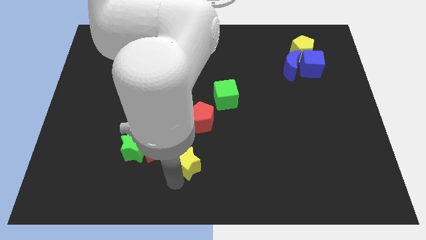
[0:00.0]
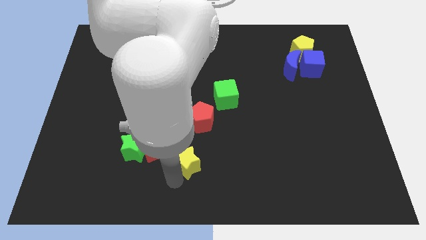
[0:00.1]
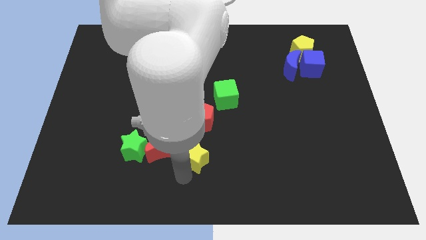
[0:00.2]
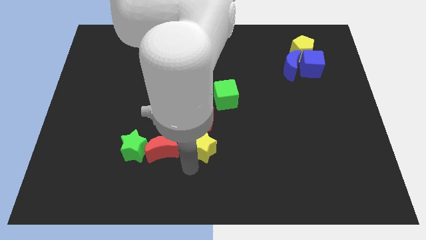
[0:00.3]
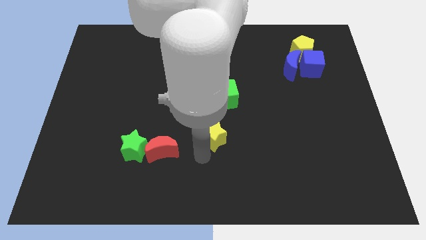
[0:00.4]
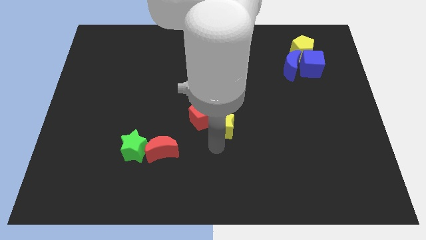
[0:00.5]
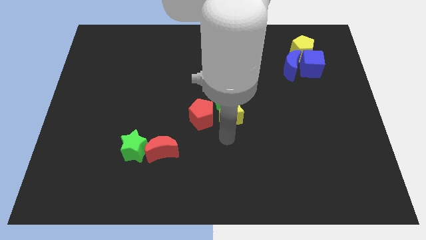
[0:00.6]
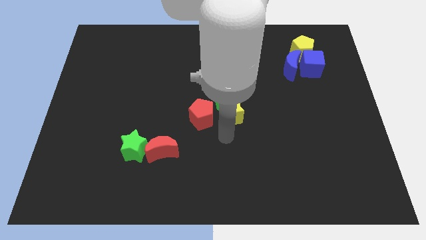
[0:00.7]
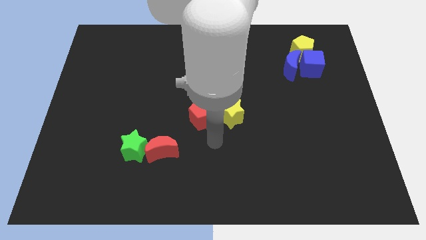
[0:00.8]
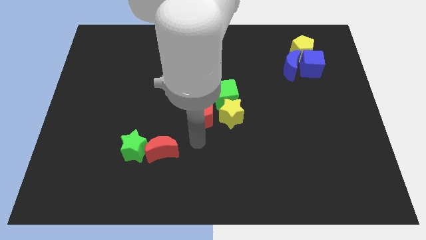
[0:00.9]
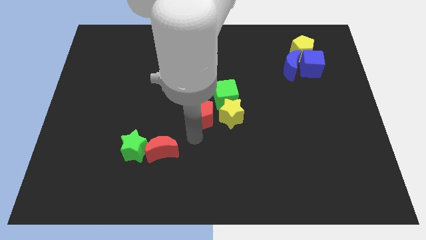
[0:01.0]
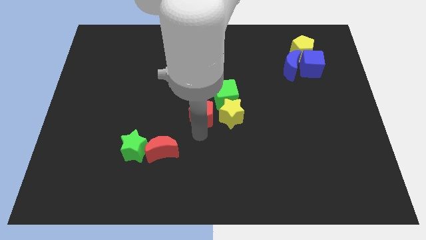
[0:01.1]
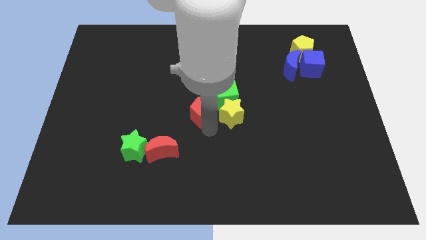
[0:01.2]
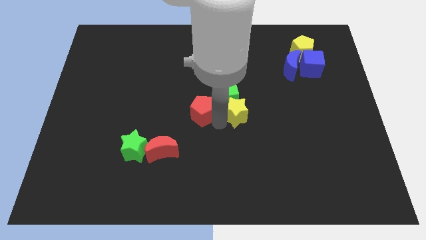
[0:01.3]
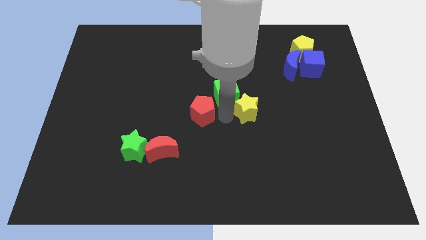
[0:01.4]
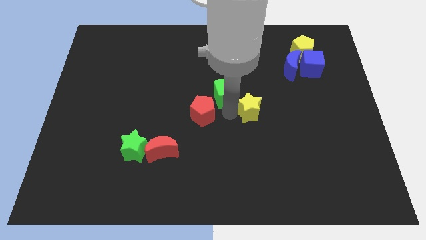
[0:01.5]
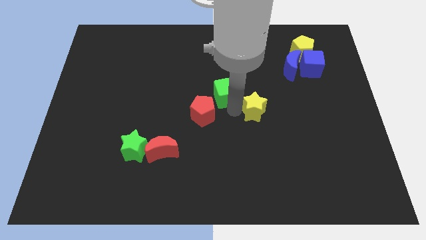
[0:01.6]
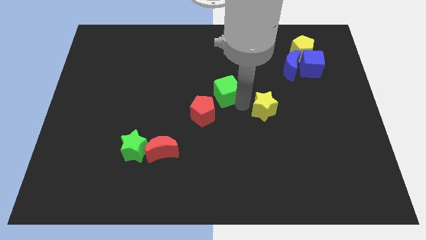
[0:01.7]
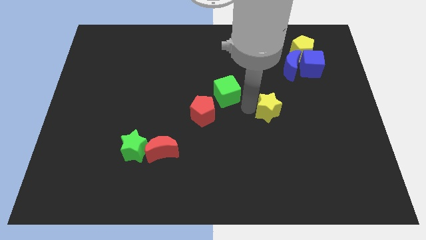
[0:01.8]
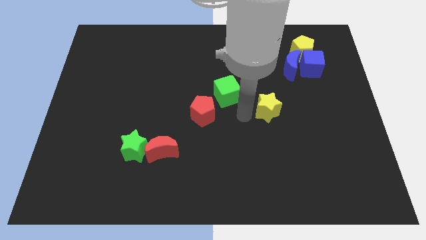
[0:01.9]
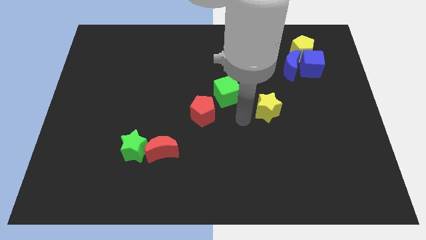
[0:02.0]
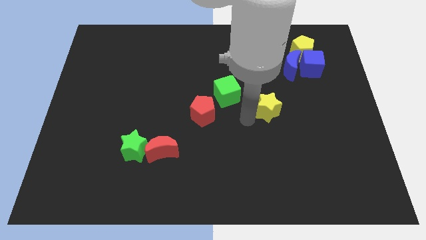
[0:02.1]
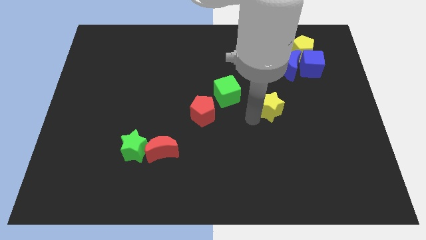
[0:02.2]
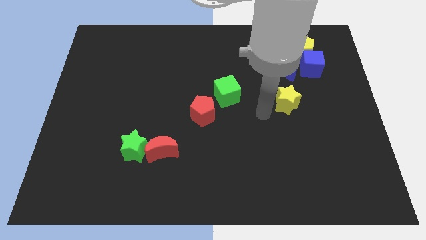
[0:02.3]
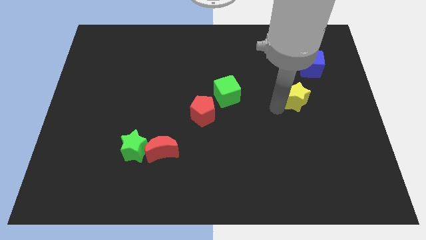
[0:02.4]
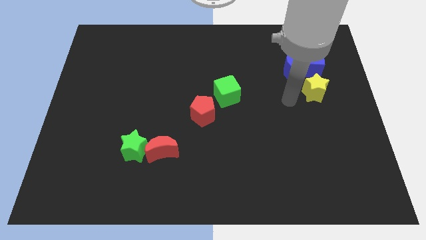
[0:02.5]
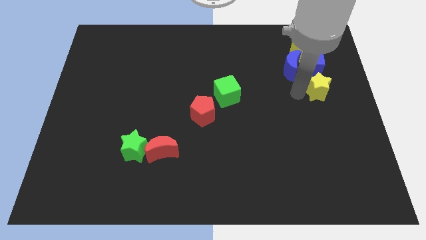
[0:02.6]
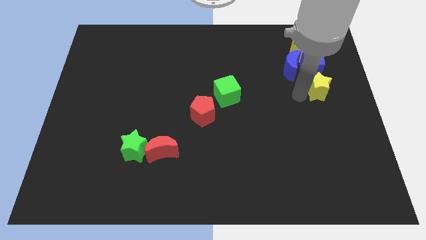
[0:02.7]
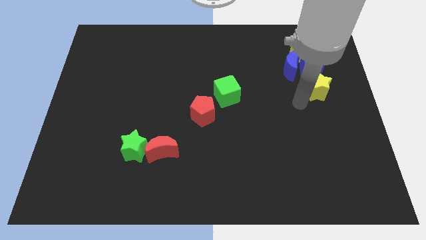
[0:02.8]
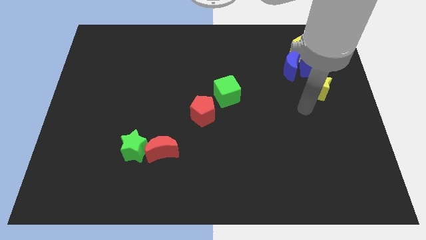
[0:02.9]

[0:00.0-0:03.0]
push the yellow star to the bottom of the blue cube

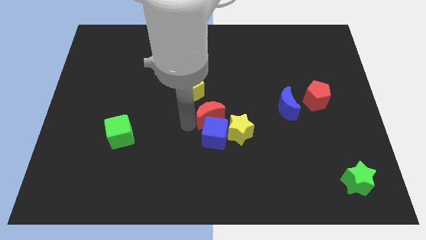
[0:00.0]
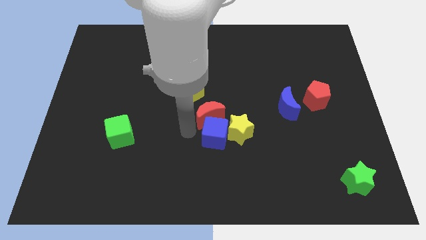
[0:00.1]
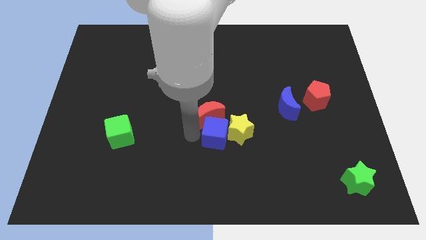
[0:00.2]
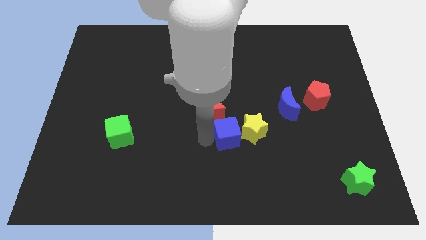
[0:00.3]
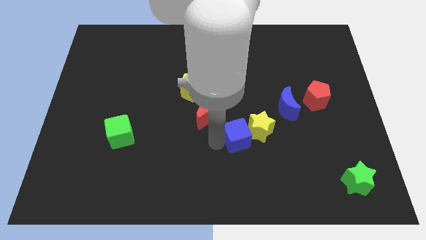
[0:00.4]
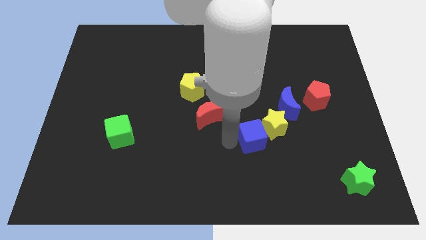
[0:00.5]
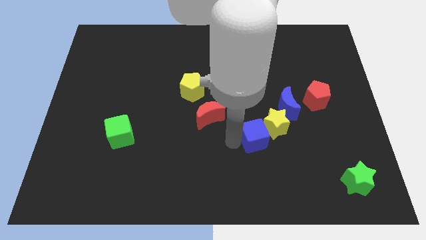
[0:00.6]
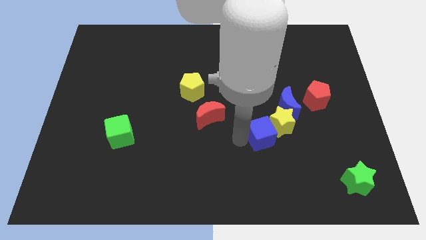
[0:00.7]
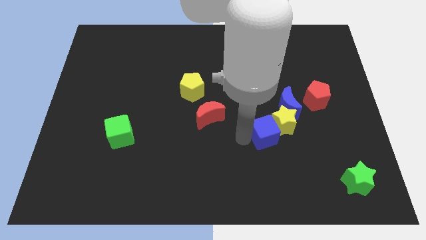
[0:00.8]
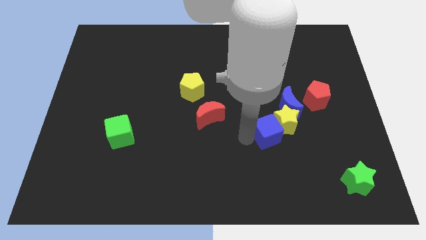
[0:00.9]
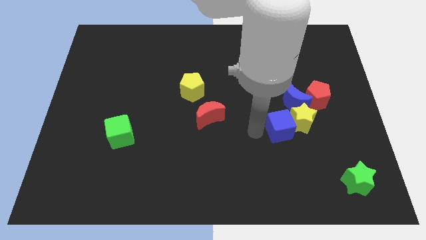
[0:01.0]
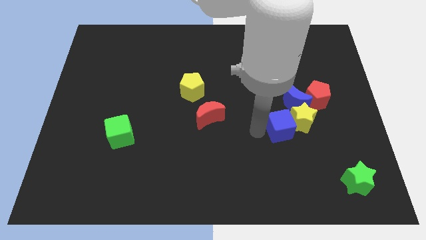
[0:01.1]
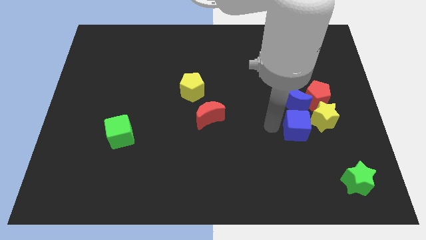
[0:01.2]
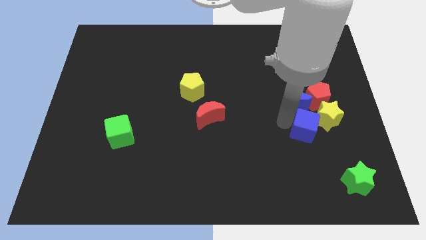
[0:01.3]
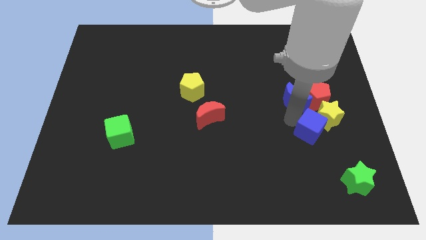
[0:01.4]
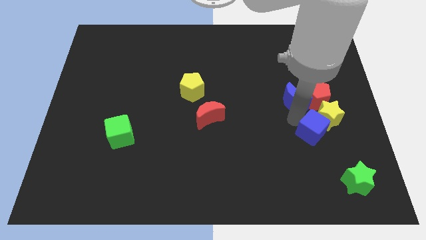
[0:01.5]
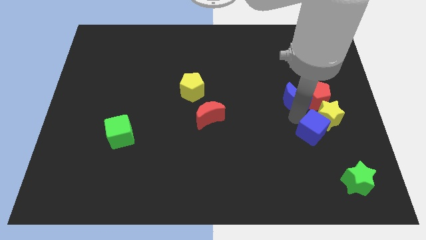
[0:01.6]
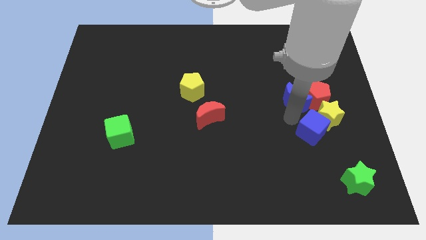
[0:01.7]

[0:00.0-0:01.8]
push the blue cube with a yellow star to the right center

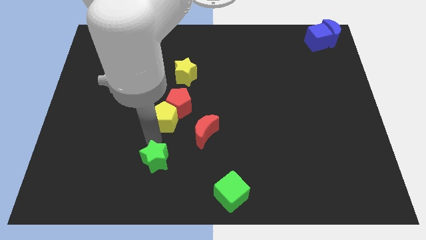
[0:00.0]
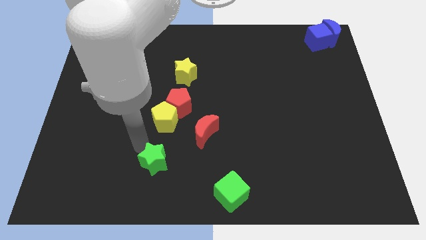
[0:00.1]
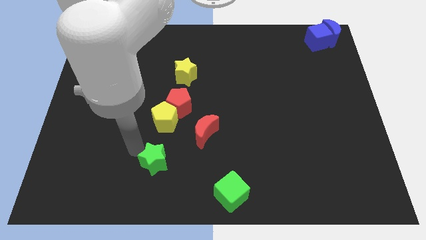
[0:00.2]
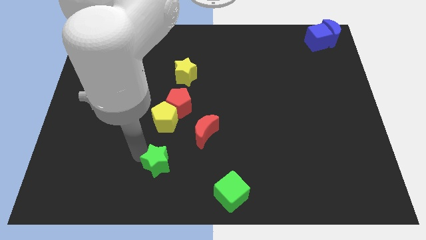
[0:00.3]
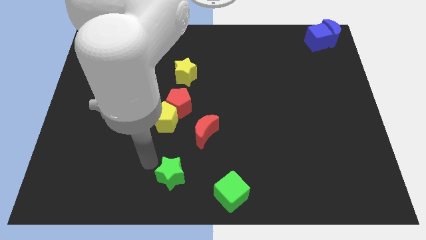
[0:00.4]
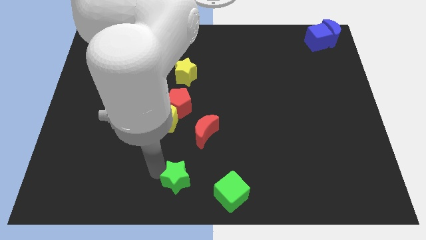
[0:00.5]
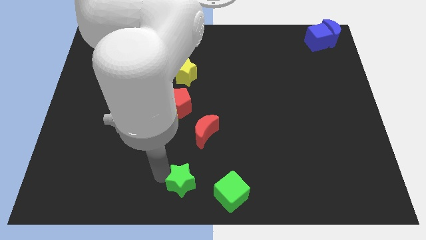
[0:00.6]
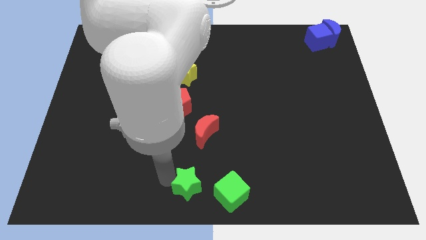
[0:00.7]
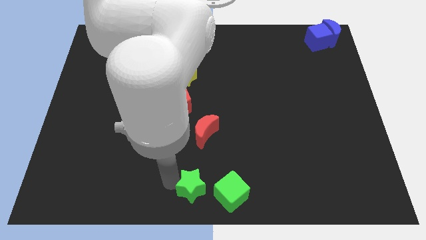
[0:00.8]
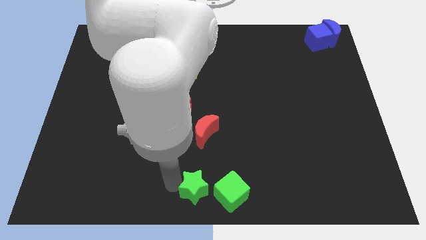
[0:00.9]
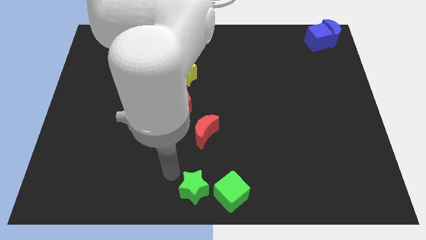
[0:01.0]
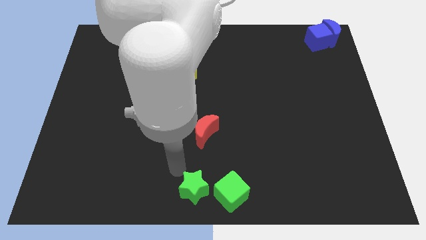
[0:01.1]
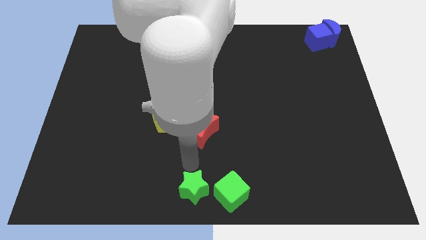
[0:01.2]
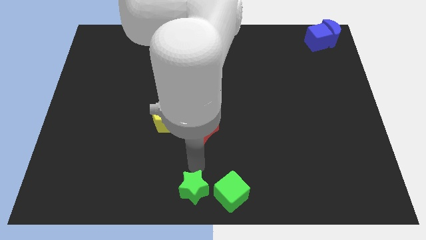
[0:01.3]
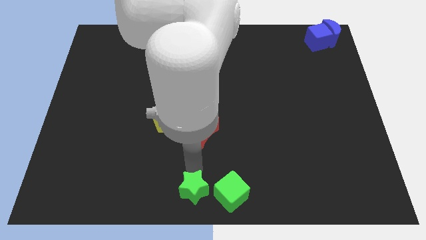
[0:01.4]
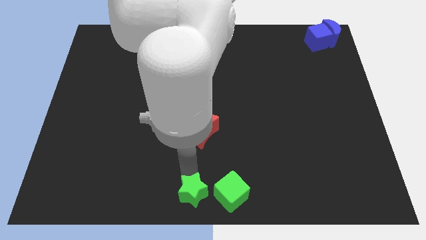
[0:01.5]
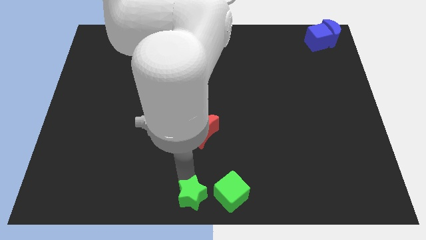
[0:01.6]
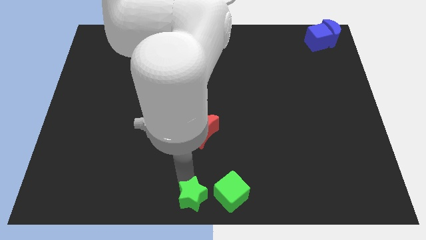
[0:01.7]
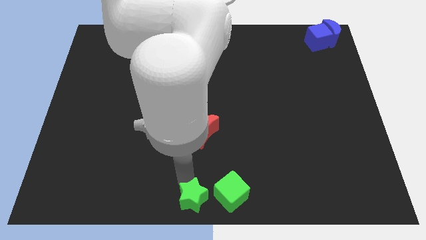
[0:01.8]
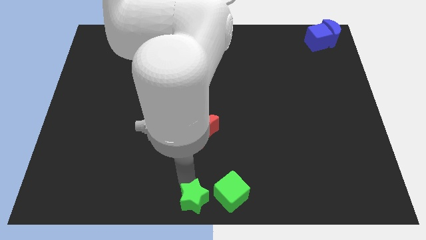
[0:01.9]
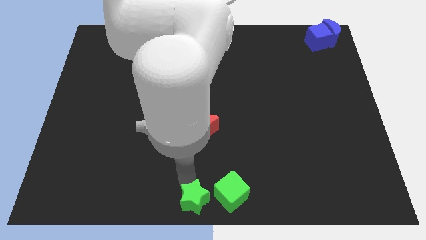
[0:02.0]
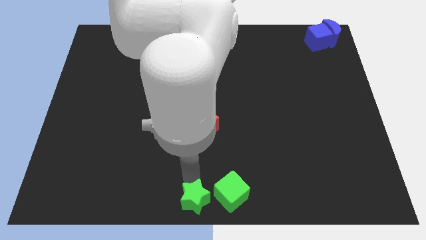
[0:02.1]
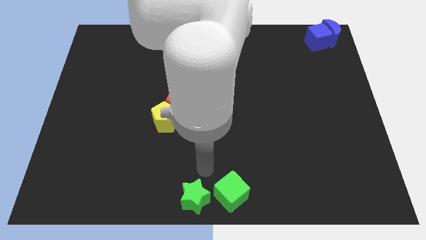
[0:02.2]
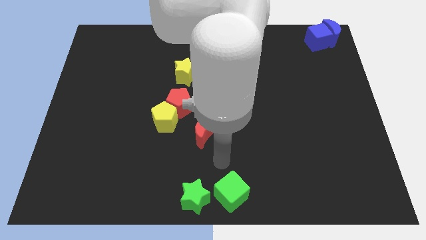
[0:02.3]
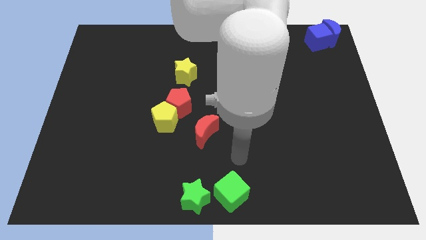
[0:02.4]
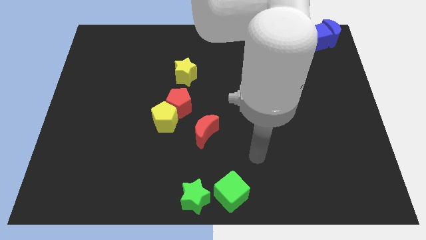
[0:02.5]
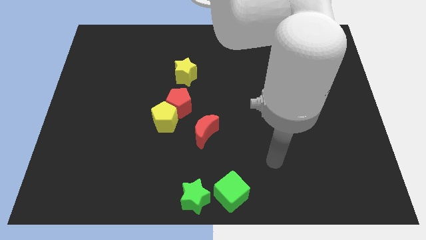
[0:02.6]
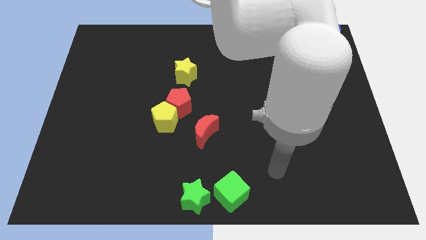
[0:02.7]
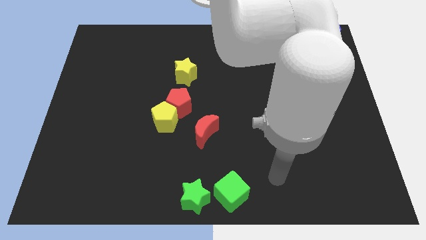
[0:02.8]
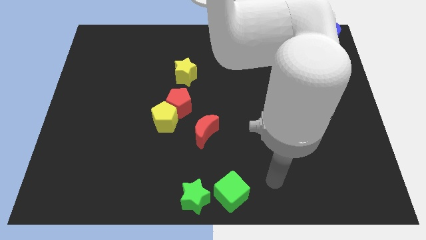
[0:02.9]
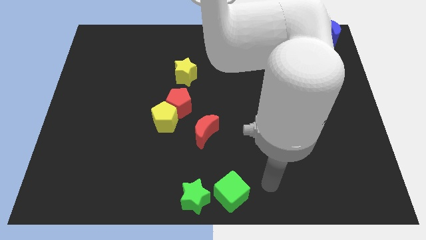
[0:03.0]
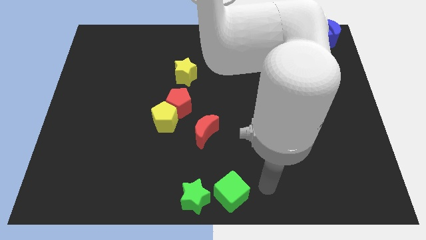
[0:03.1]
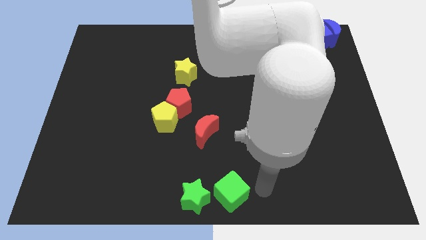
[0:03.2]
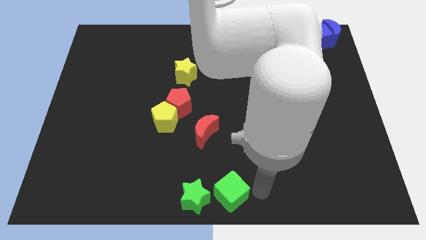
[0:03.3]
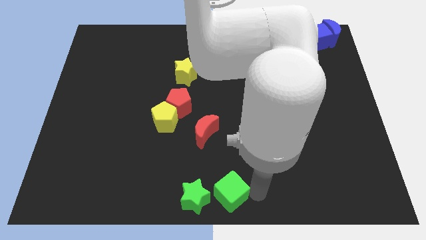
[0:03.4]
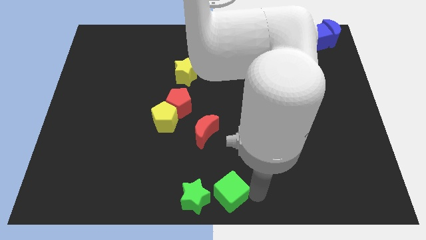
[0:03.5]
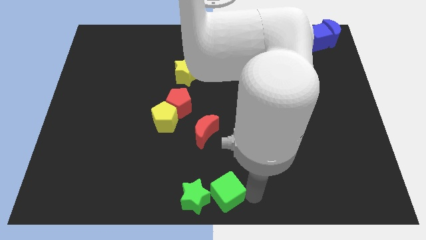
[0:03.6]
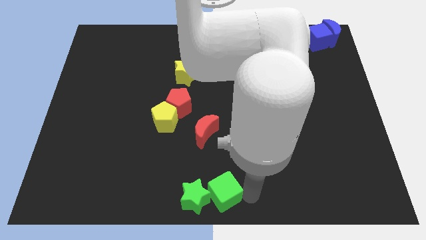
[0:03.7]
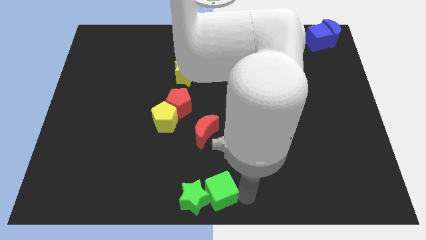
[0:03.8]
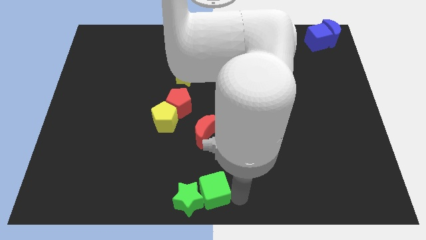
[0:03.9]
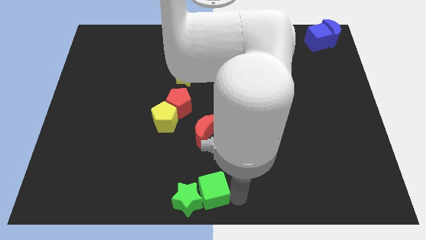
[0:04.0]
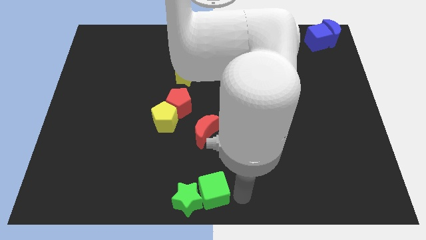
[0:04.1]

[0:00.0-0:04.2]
move the green star and the green cube close to each other
